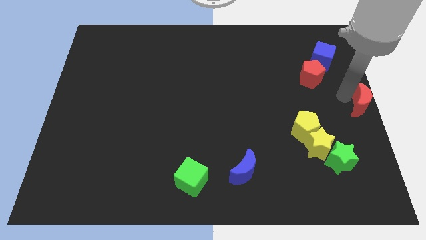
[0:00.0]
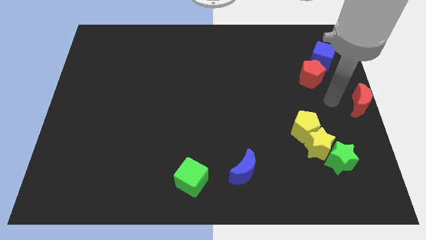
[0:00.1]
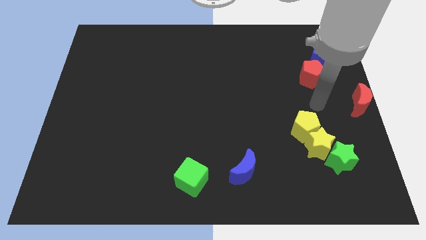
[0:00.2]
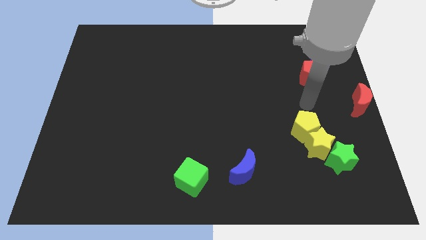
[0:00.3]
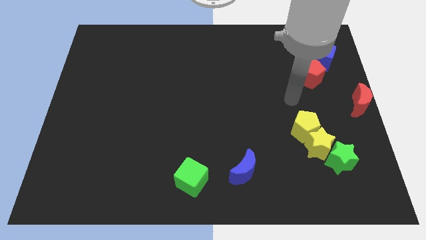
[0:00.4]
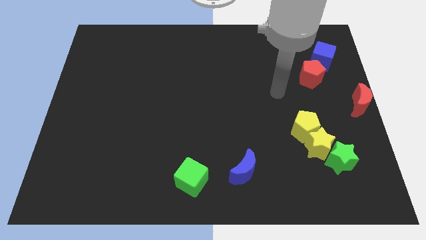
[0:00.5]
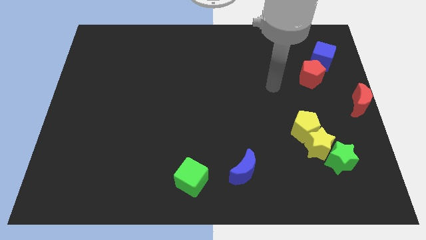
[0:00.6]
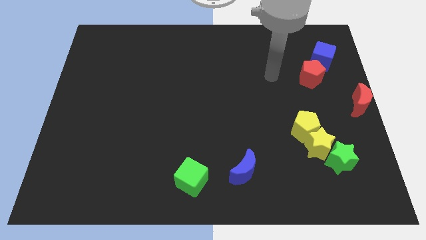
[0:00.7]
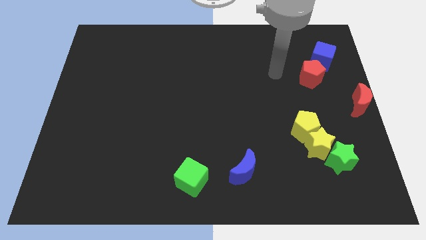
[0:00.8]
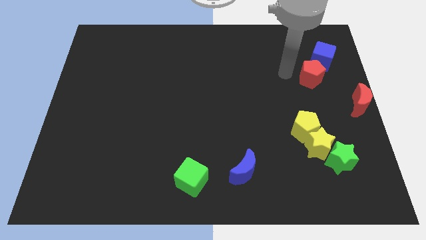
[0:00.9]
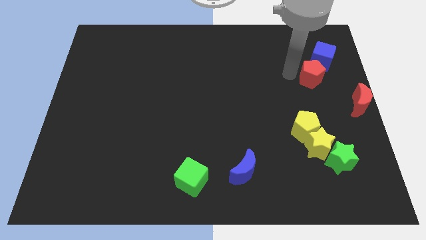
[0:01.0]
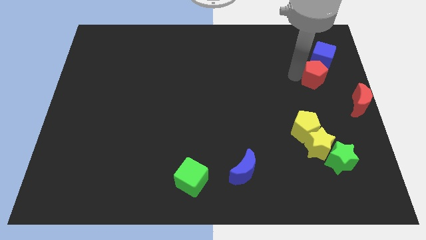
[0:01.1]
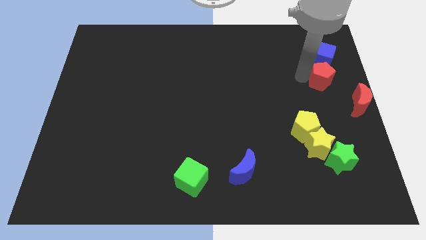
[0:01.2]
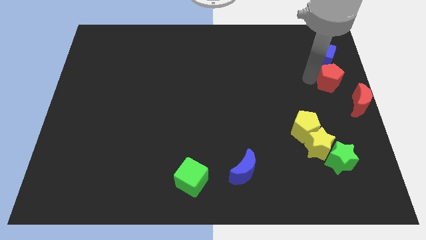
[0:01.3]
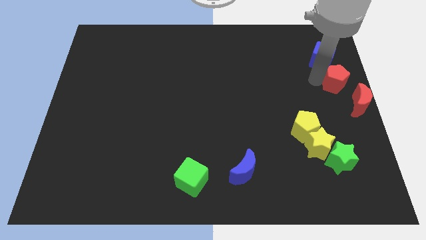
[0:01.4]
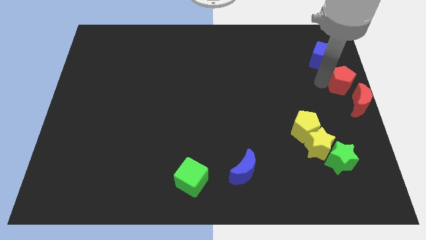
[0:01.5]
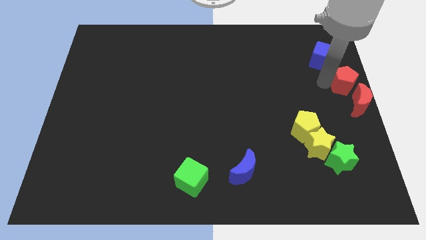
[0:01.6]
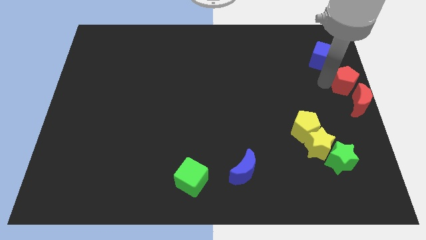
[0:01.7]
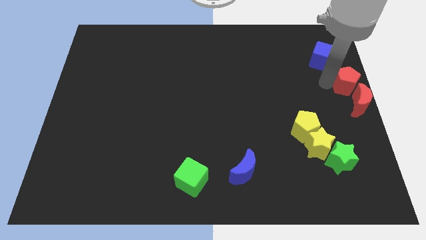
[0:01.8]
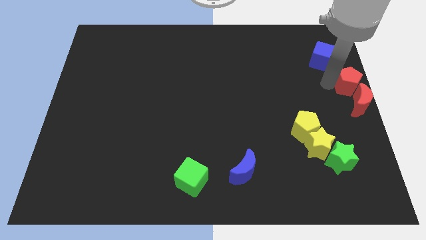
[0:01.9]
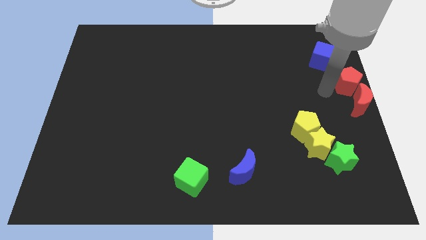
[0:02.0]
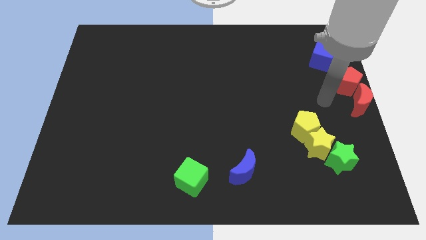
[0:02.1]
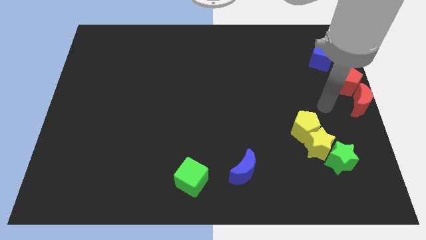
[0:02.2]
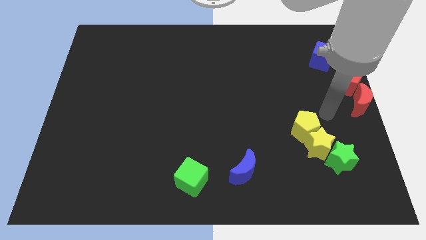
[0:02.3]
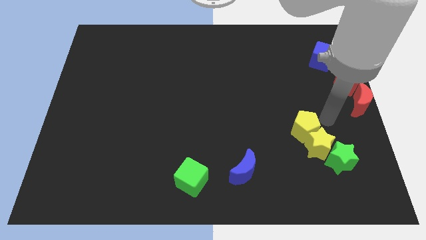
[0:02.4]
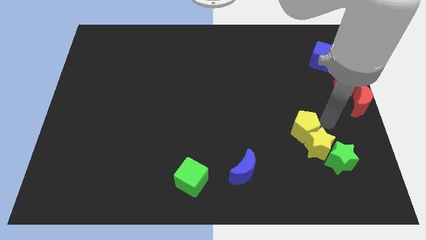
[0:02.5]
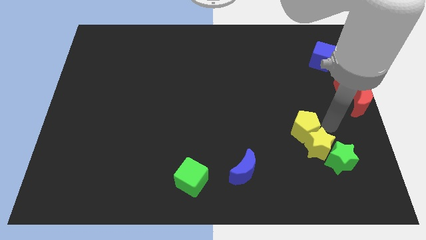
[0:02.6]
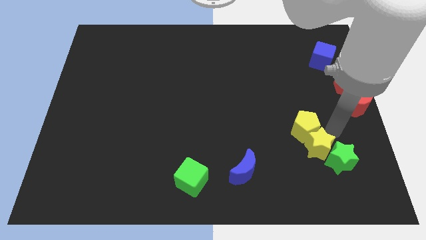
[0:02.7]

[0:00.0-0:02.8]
push the red pentagon to the top left of the red crescent

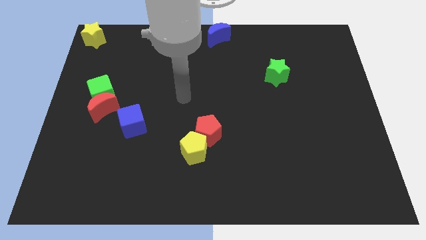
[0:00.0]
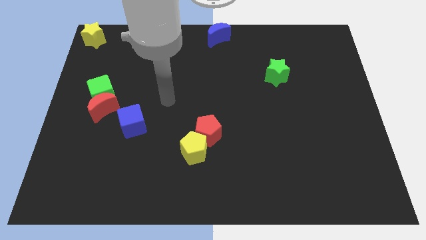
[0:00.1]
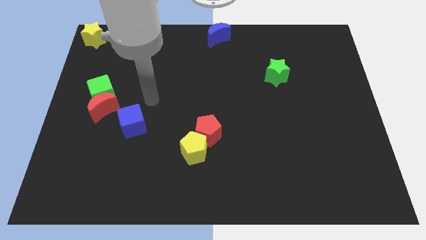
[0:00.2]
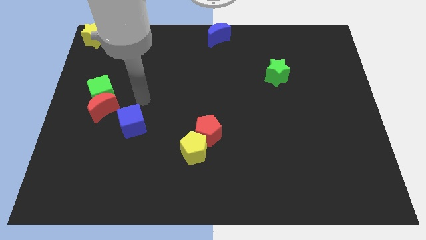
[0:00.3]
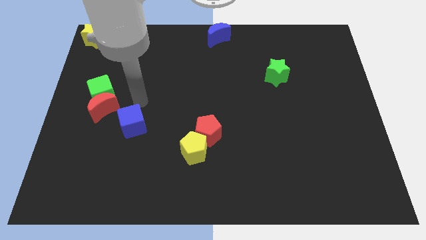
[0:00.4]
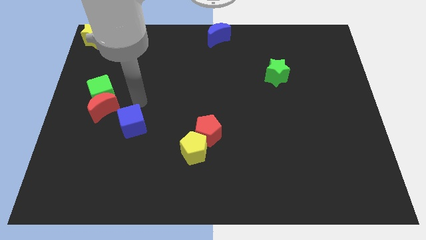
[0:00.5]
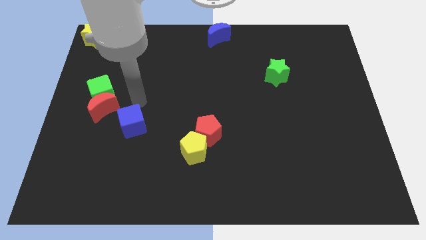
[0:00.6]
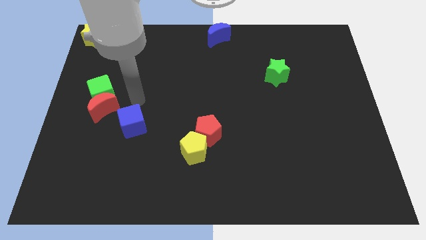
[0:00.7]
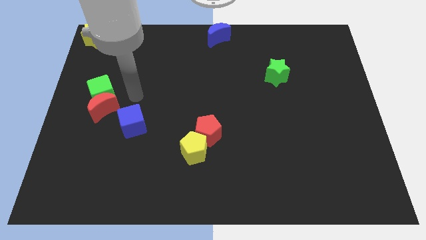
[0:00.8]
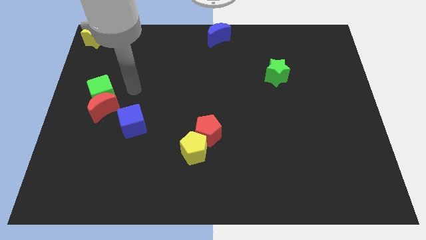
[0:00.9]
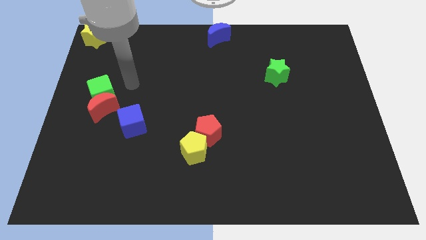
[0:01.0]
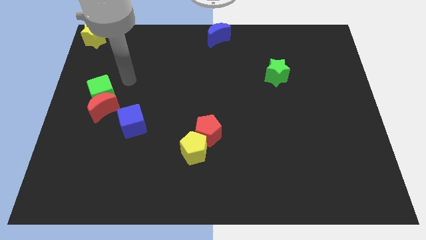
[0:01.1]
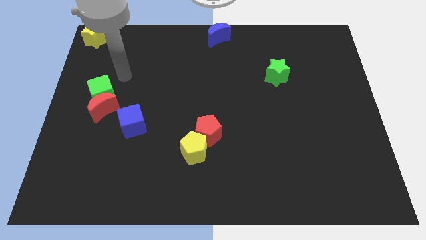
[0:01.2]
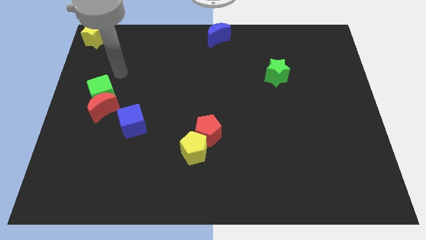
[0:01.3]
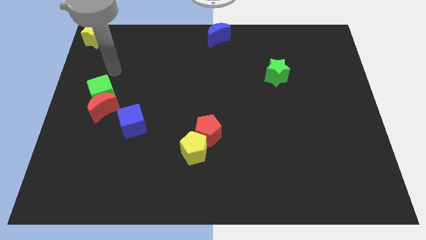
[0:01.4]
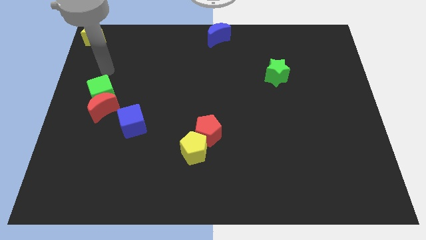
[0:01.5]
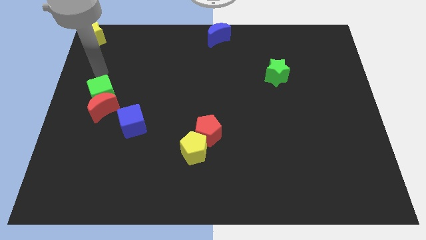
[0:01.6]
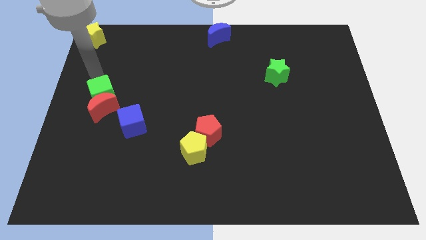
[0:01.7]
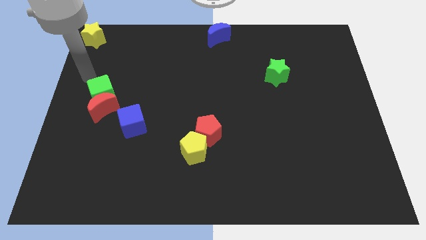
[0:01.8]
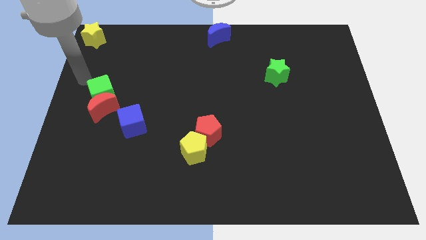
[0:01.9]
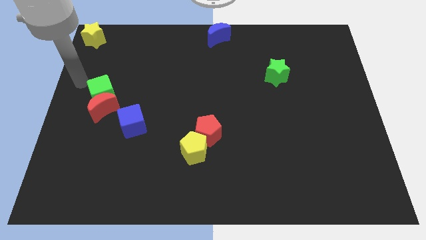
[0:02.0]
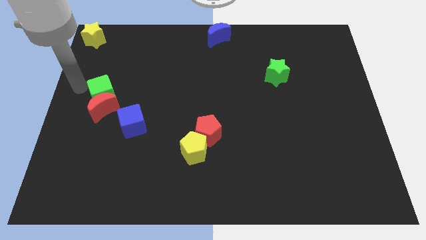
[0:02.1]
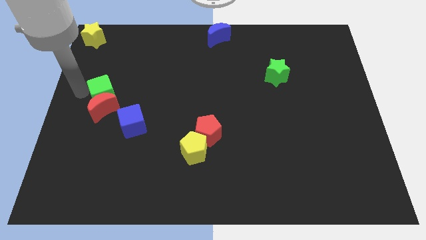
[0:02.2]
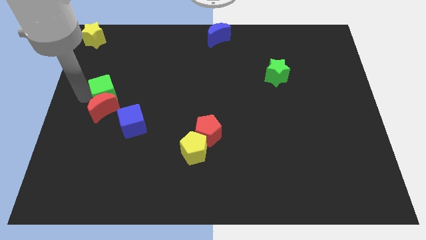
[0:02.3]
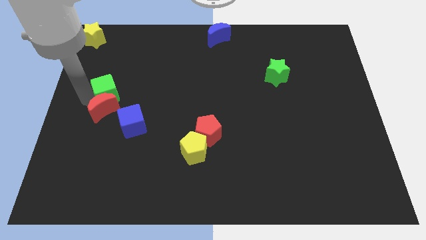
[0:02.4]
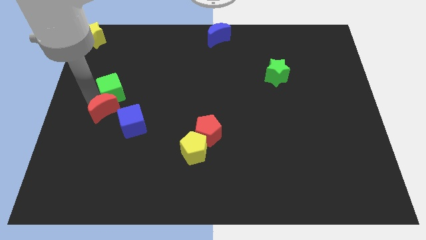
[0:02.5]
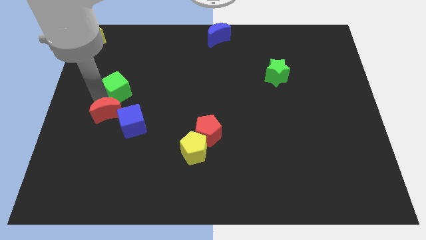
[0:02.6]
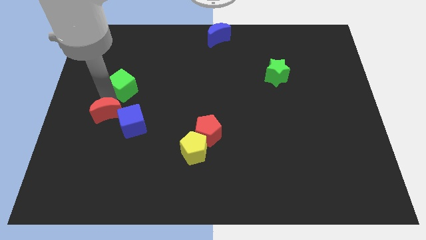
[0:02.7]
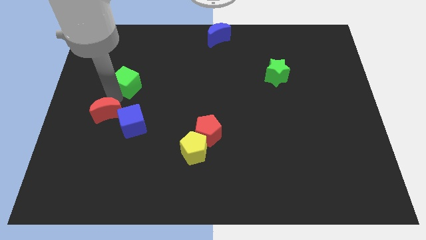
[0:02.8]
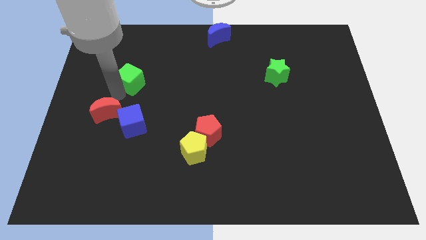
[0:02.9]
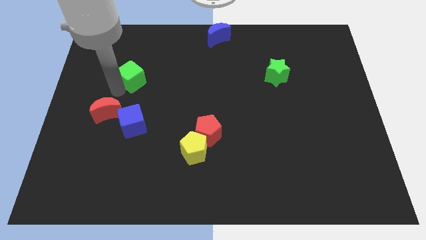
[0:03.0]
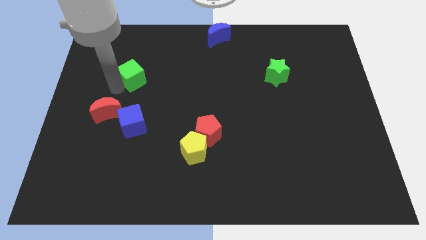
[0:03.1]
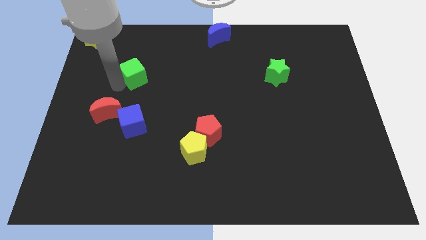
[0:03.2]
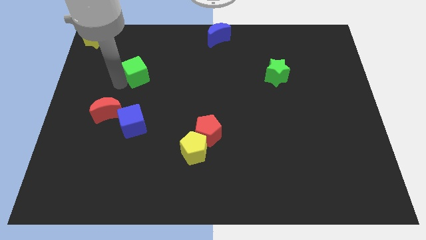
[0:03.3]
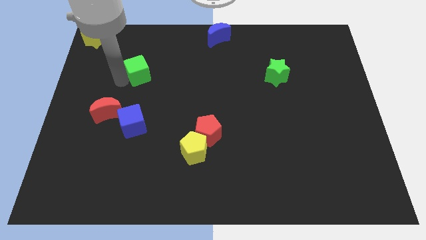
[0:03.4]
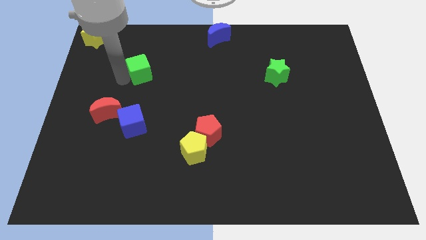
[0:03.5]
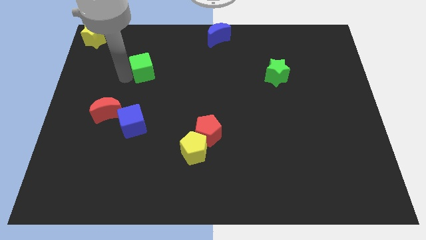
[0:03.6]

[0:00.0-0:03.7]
put the green cube vertically to the top side of the blue cube

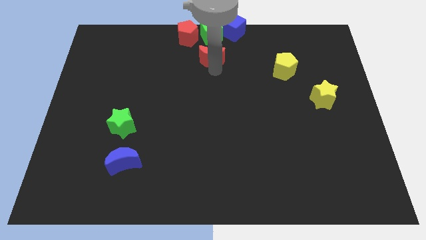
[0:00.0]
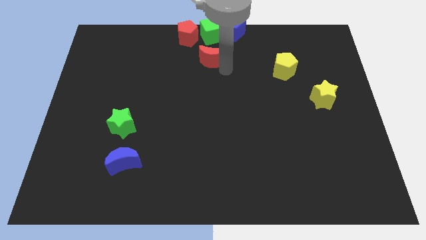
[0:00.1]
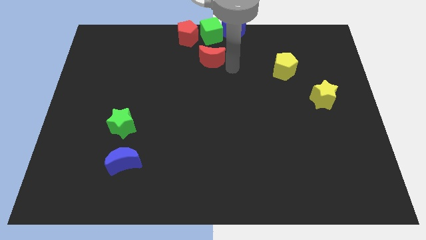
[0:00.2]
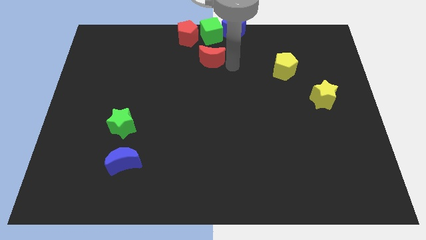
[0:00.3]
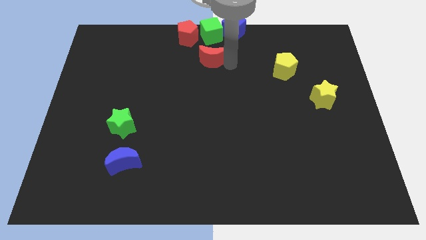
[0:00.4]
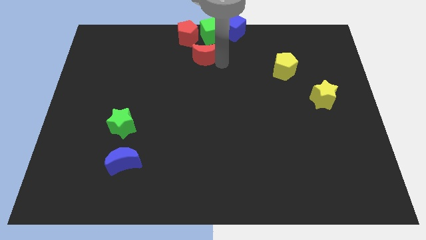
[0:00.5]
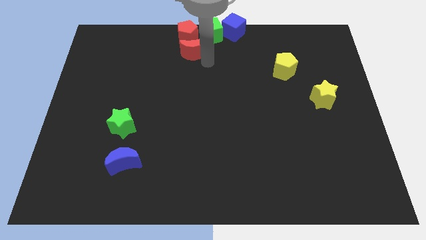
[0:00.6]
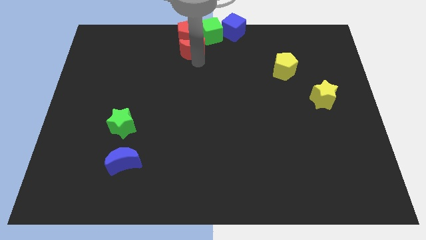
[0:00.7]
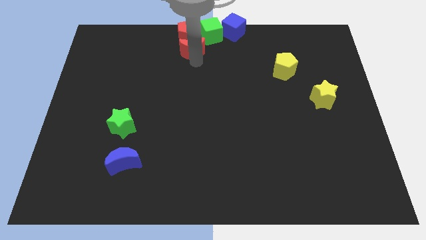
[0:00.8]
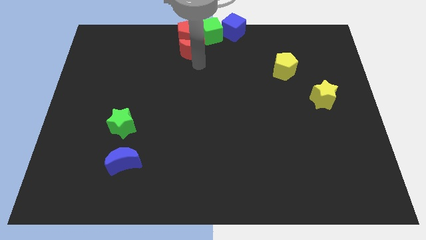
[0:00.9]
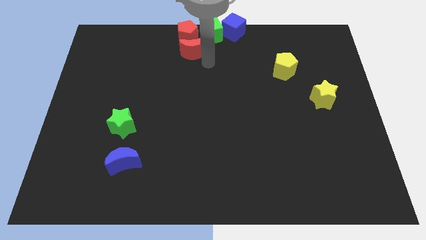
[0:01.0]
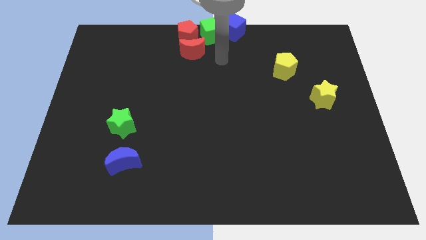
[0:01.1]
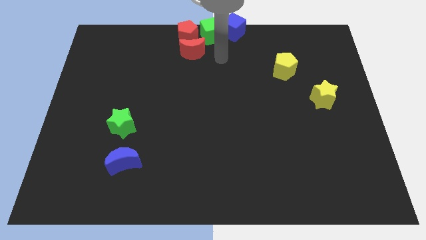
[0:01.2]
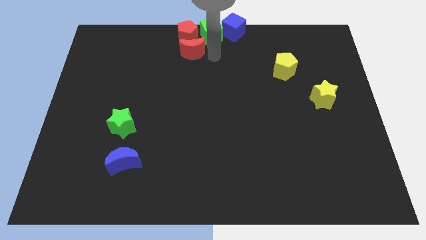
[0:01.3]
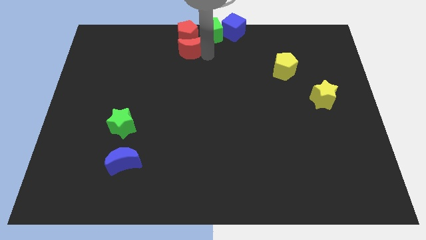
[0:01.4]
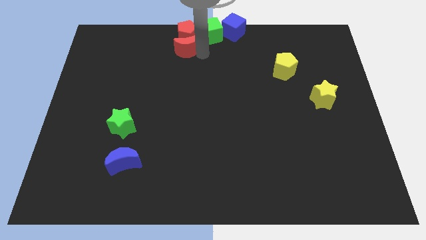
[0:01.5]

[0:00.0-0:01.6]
place the red moon below the red pentagon

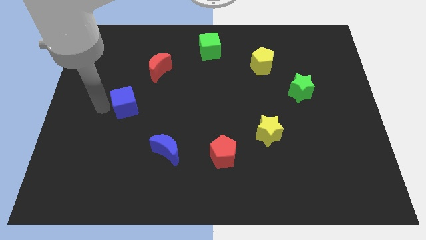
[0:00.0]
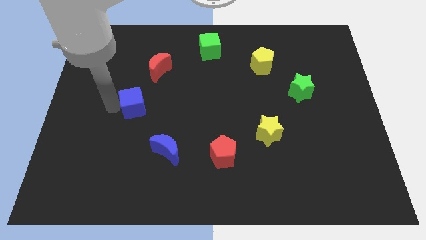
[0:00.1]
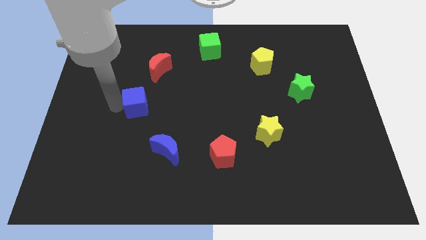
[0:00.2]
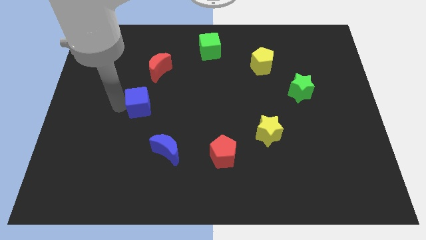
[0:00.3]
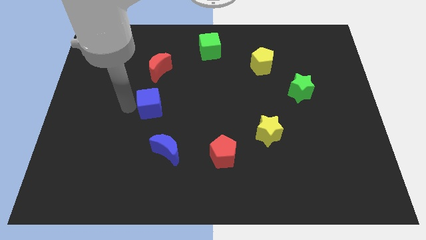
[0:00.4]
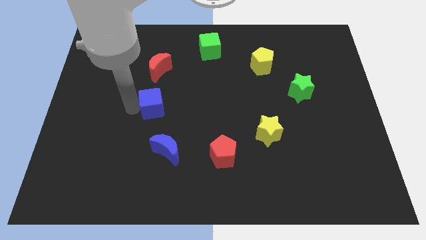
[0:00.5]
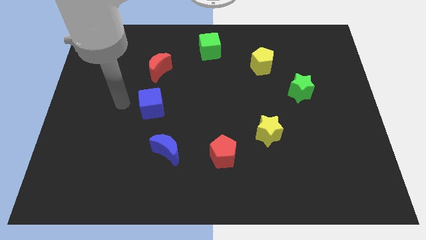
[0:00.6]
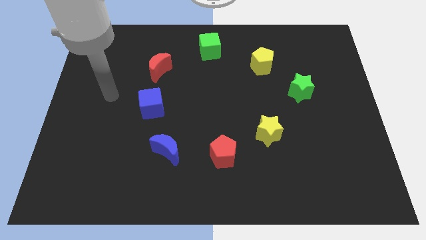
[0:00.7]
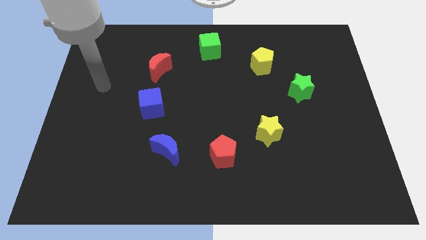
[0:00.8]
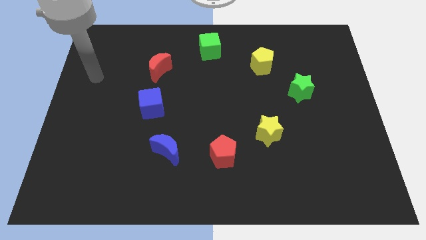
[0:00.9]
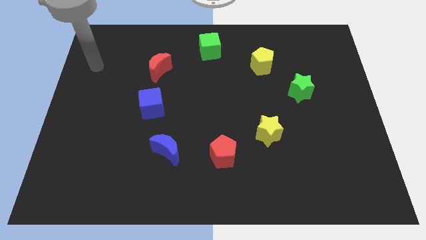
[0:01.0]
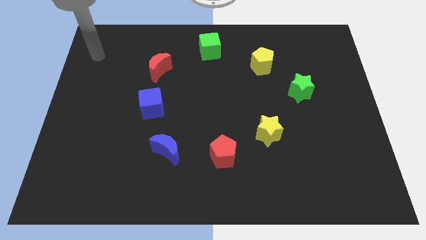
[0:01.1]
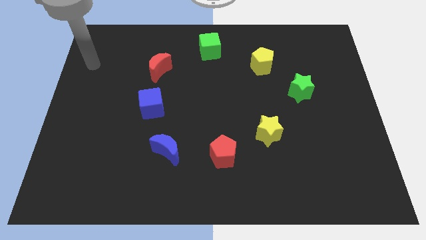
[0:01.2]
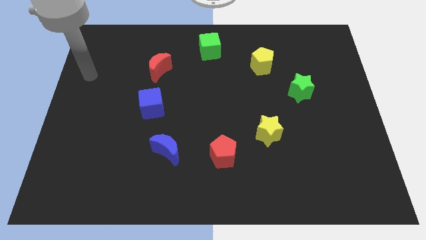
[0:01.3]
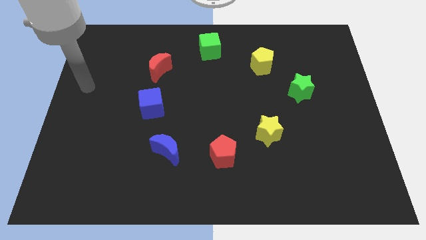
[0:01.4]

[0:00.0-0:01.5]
place the blue cube in between the red crescent and the blue crescent
